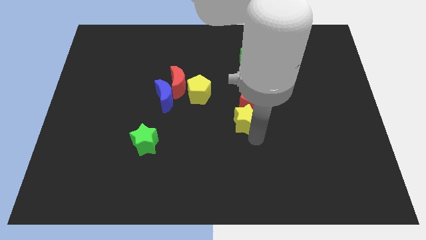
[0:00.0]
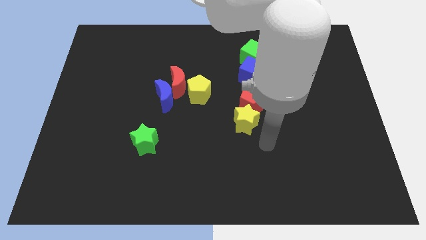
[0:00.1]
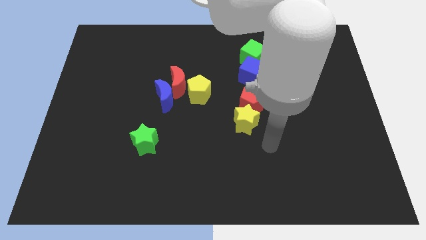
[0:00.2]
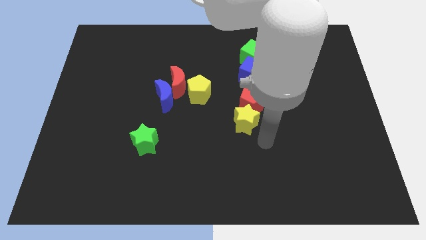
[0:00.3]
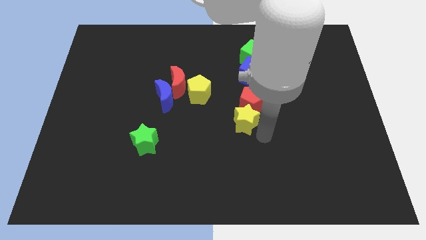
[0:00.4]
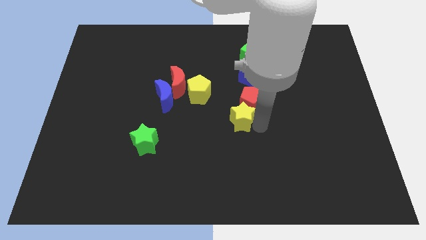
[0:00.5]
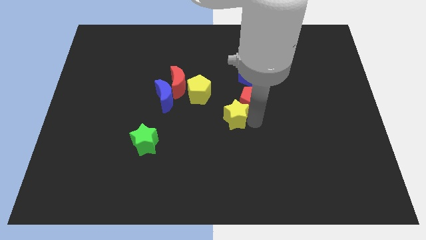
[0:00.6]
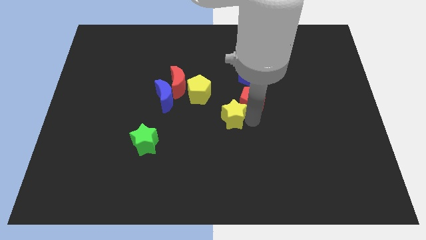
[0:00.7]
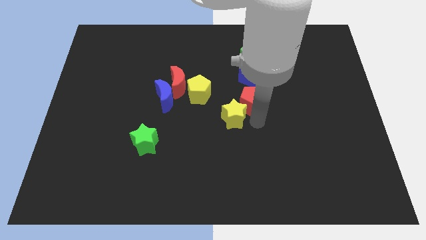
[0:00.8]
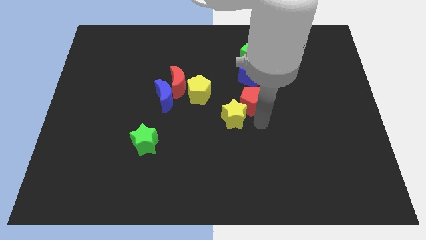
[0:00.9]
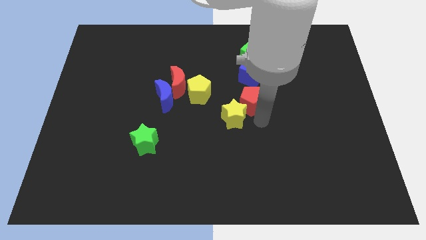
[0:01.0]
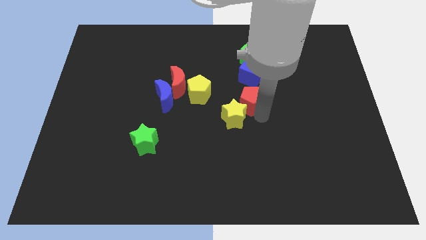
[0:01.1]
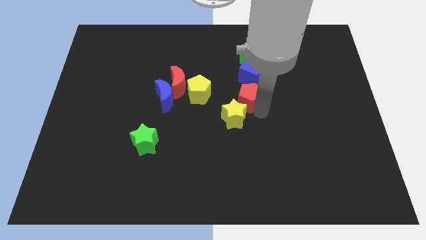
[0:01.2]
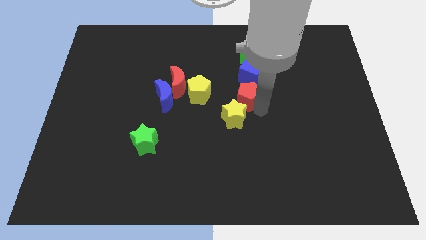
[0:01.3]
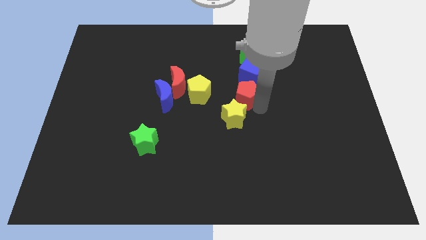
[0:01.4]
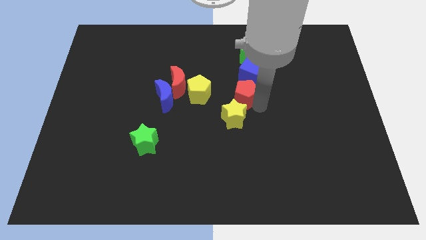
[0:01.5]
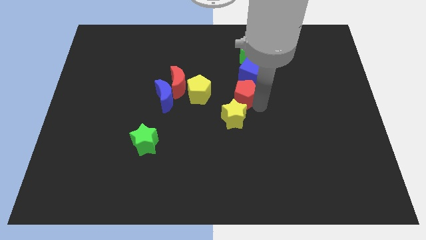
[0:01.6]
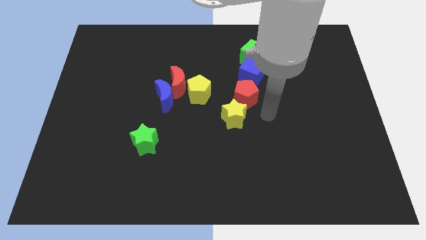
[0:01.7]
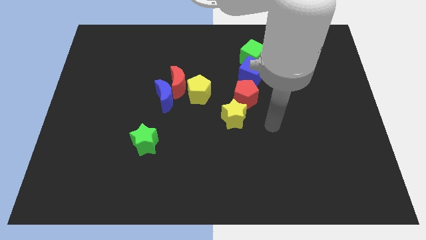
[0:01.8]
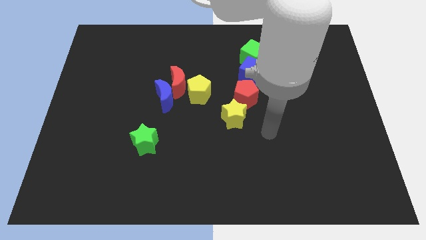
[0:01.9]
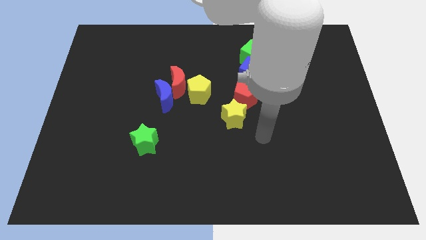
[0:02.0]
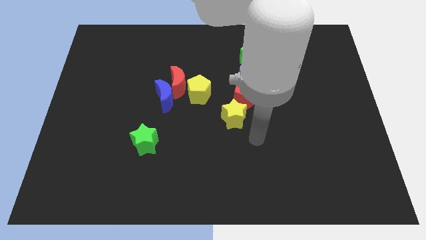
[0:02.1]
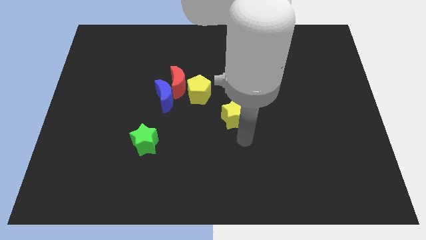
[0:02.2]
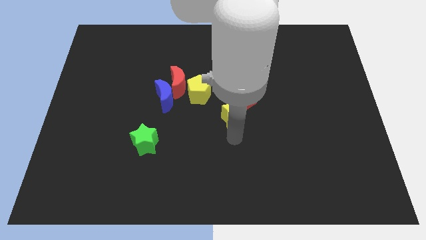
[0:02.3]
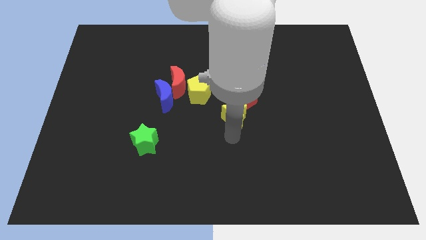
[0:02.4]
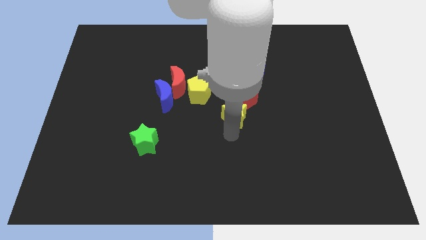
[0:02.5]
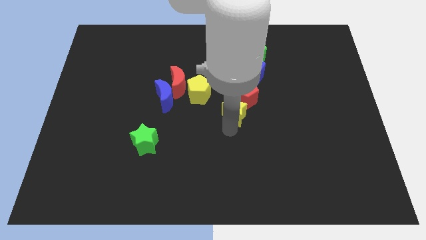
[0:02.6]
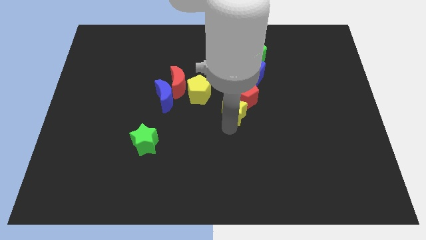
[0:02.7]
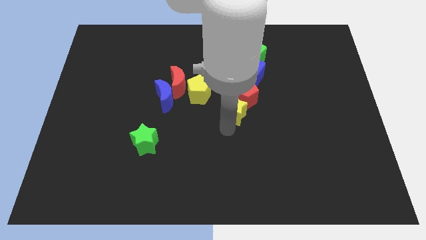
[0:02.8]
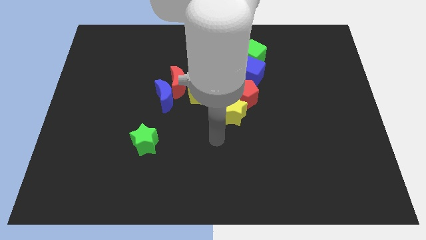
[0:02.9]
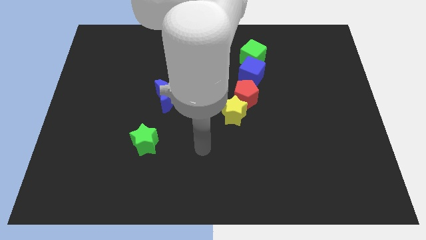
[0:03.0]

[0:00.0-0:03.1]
adjust the red pentagon and yellow star at the bottom side of the blue cube

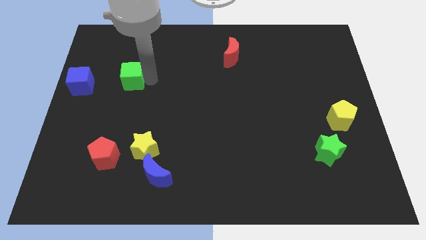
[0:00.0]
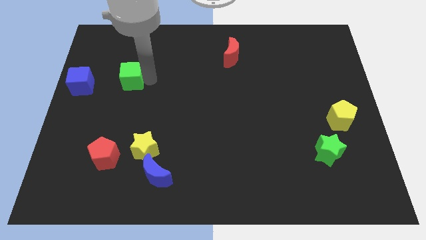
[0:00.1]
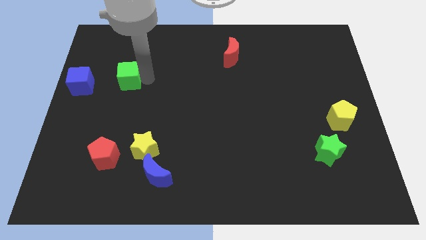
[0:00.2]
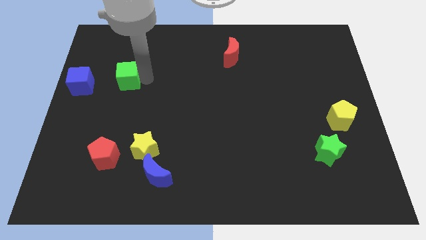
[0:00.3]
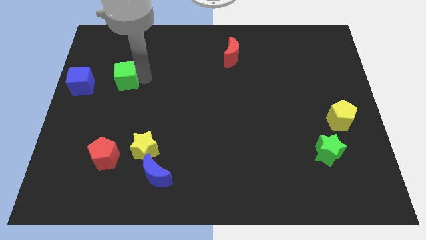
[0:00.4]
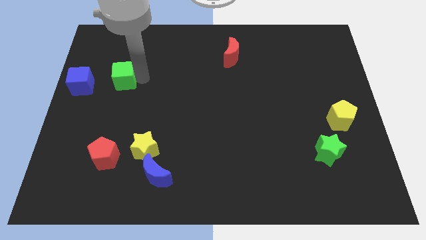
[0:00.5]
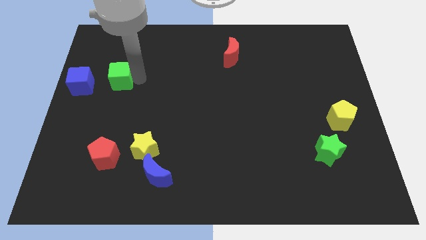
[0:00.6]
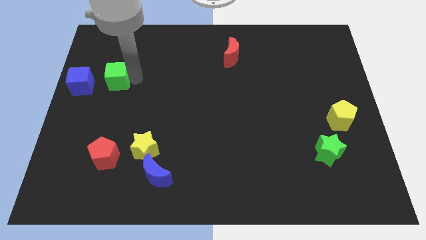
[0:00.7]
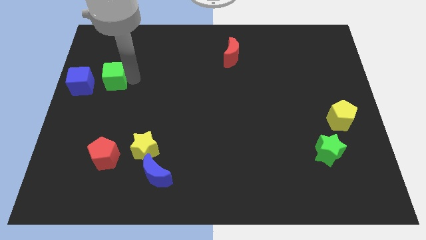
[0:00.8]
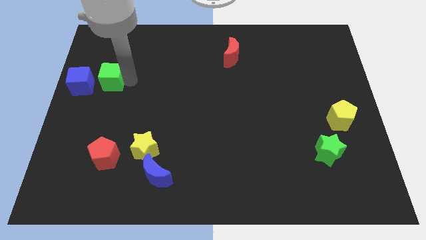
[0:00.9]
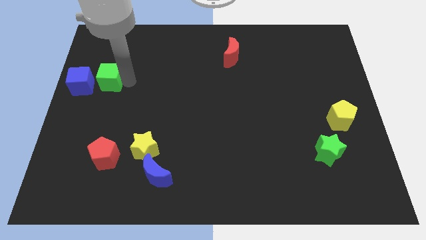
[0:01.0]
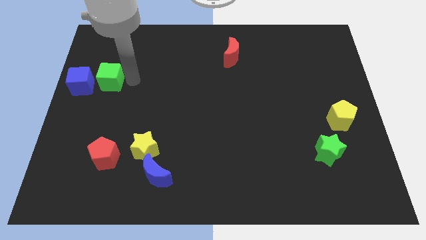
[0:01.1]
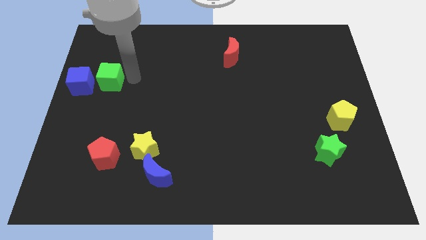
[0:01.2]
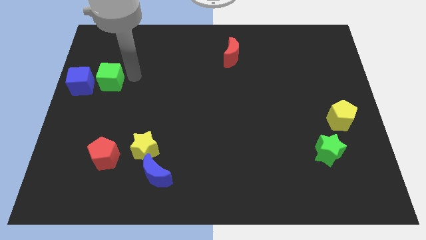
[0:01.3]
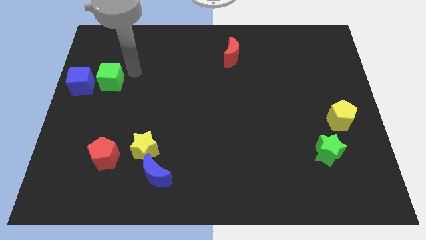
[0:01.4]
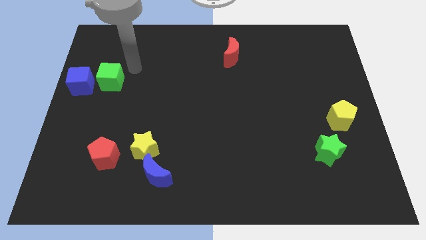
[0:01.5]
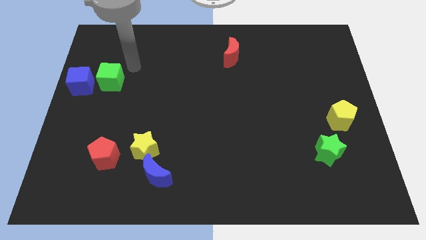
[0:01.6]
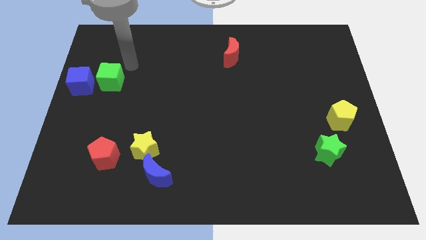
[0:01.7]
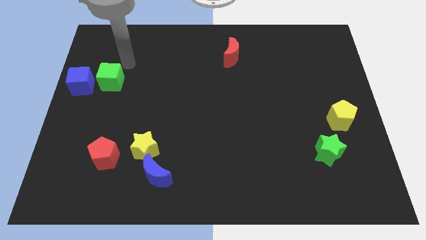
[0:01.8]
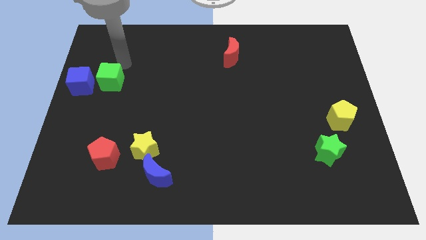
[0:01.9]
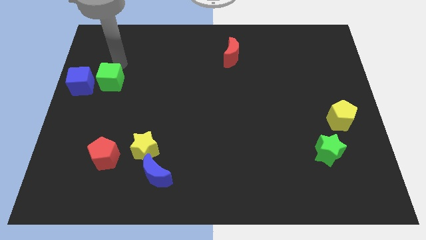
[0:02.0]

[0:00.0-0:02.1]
move the green cube to the left of the blue cube

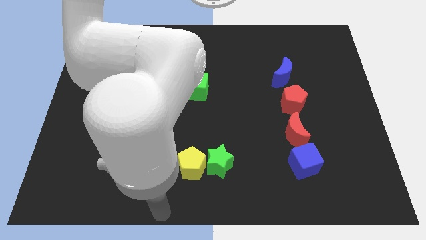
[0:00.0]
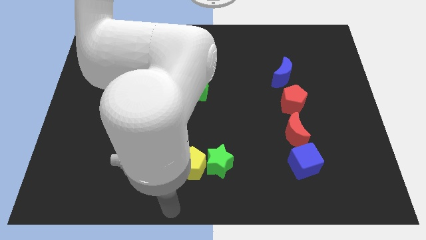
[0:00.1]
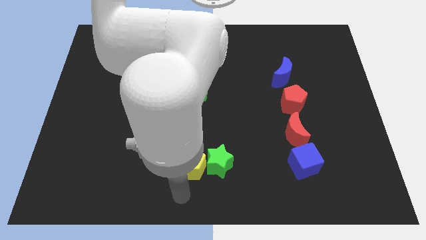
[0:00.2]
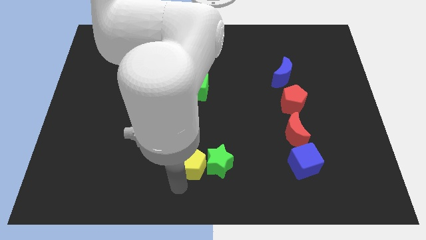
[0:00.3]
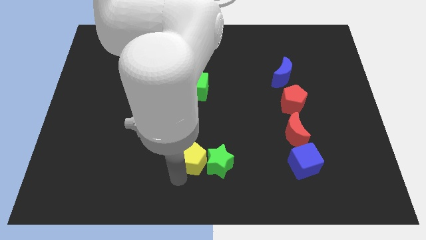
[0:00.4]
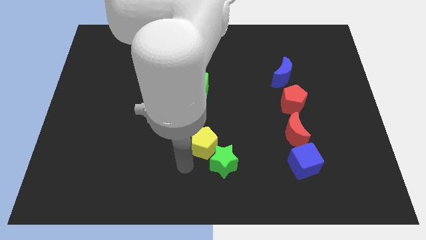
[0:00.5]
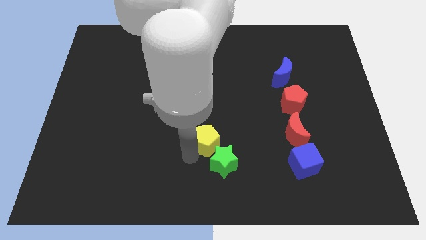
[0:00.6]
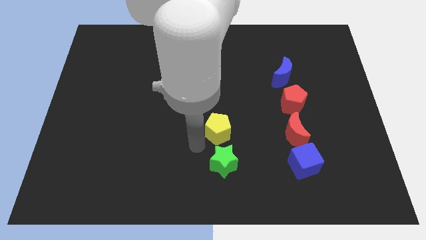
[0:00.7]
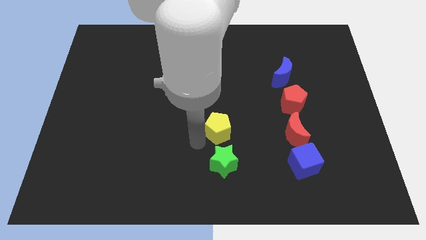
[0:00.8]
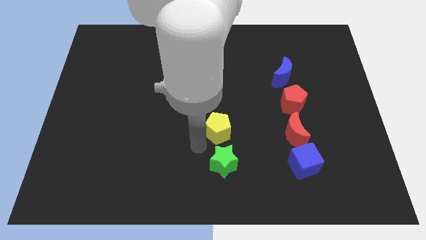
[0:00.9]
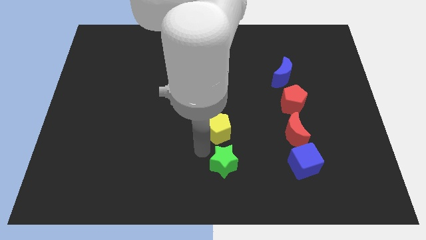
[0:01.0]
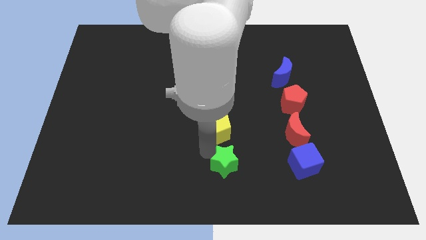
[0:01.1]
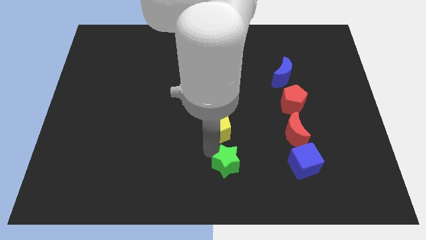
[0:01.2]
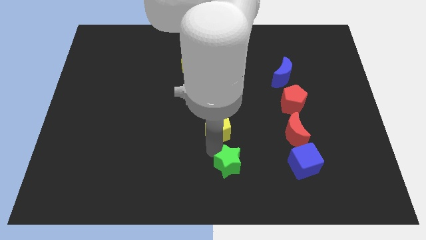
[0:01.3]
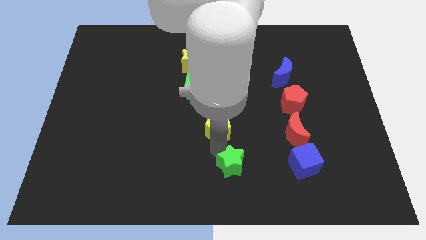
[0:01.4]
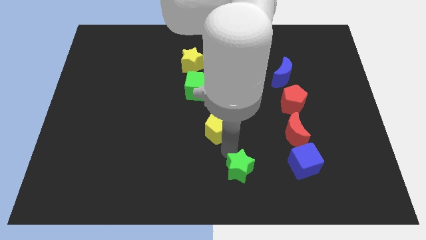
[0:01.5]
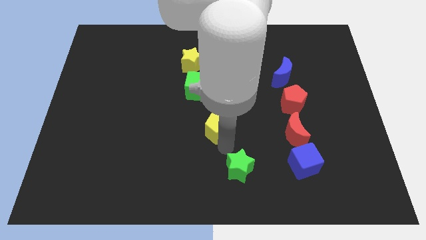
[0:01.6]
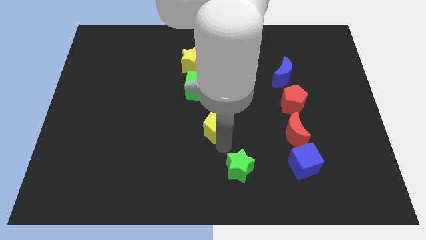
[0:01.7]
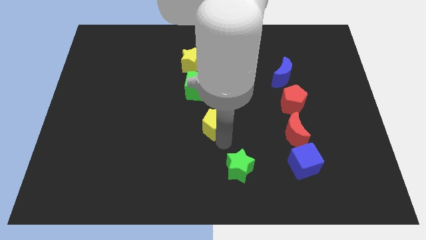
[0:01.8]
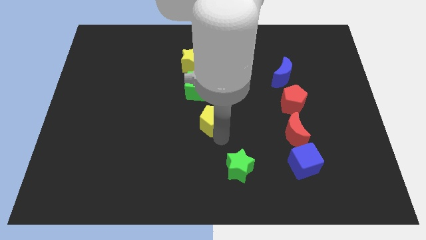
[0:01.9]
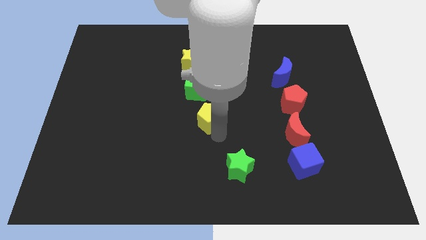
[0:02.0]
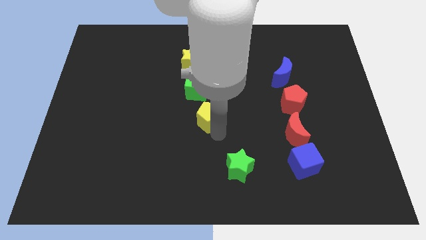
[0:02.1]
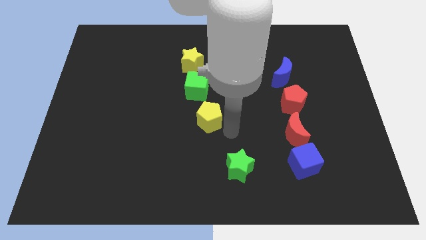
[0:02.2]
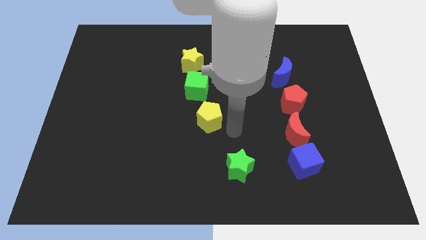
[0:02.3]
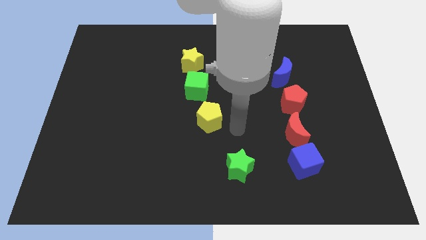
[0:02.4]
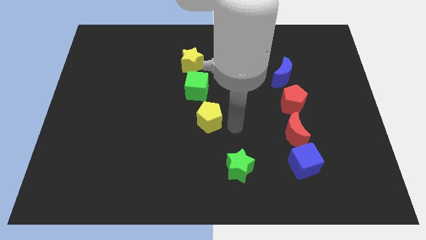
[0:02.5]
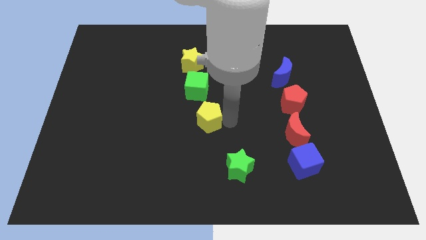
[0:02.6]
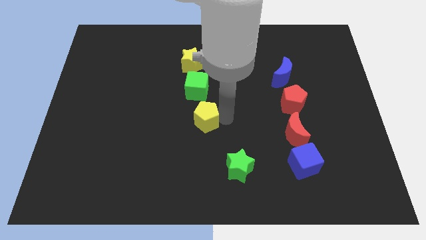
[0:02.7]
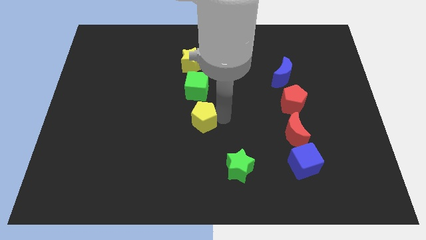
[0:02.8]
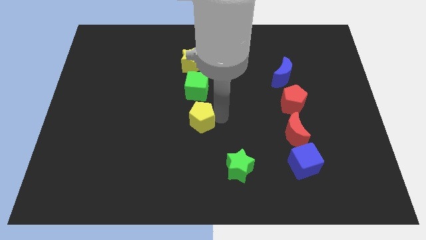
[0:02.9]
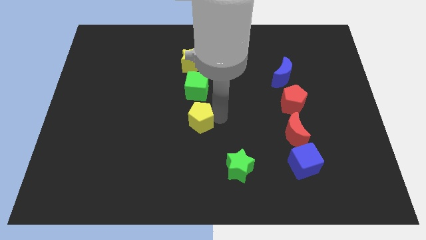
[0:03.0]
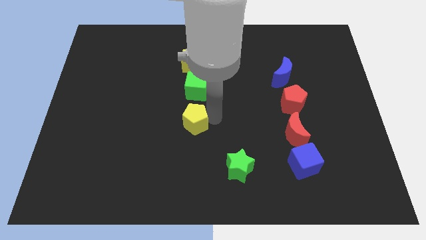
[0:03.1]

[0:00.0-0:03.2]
push the yellow pentagon below the green cube

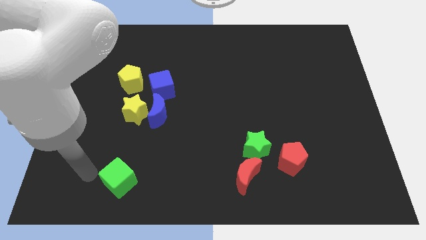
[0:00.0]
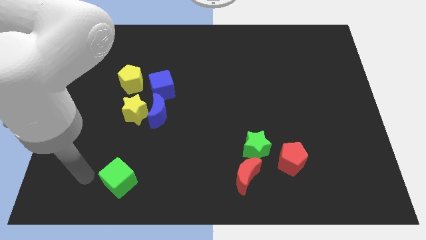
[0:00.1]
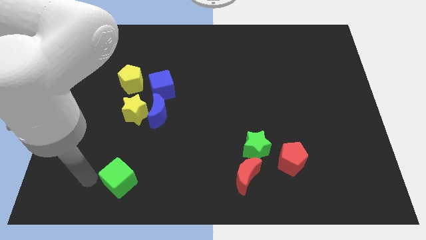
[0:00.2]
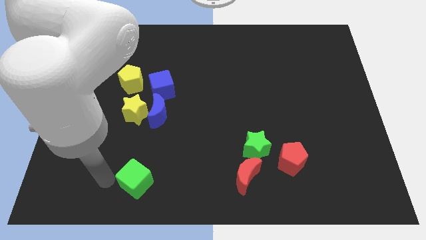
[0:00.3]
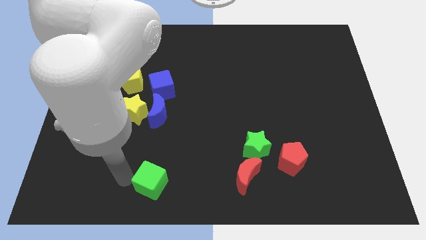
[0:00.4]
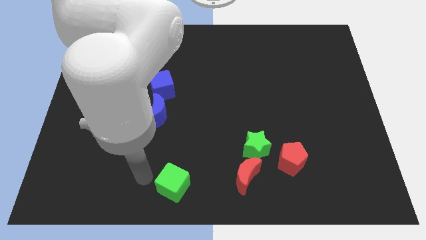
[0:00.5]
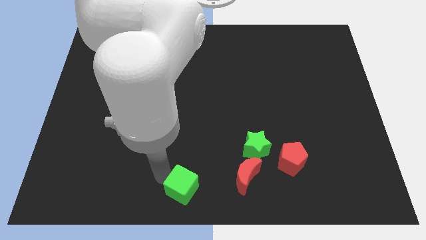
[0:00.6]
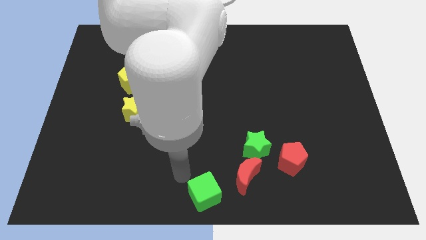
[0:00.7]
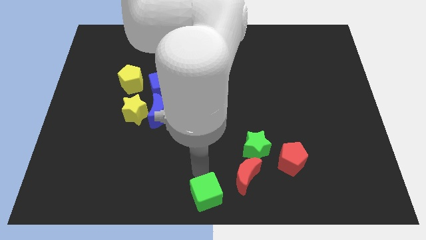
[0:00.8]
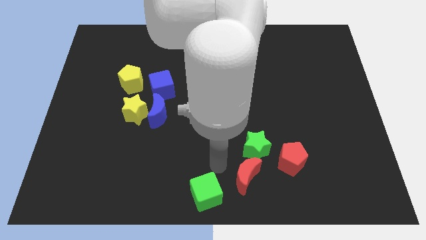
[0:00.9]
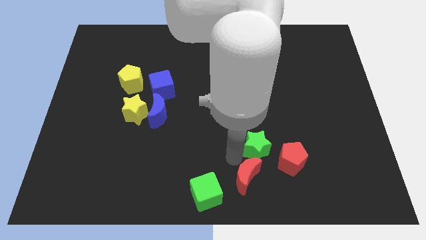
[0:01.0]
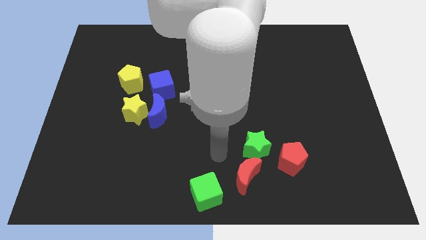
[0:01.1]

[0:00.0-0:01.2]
place the green cube at the bottom center of the board
